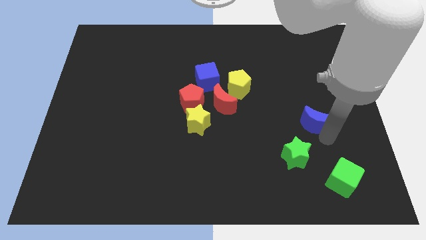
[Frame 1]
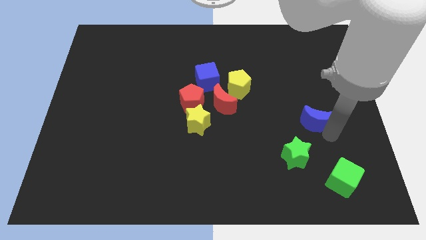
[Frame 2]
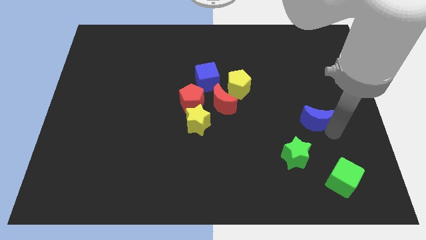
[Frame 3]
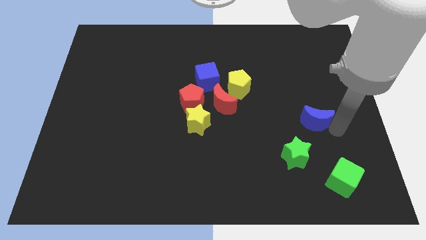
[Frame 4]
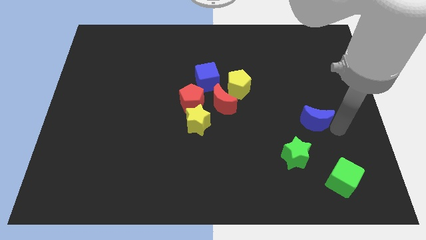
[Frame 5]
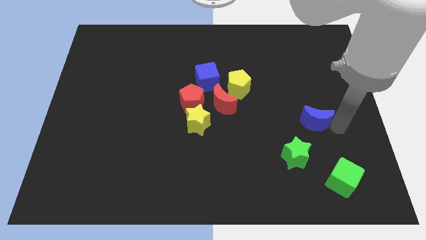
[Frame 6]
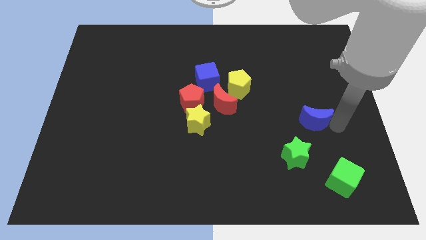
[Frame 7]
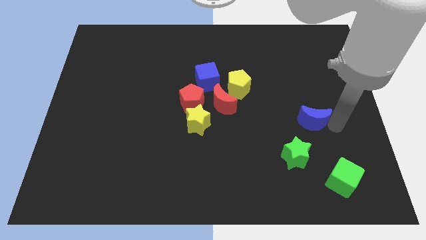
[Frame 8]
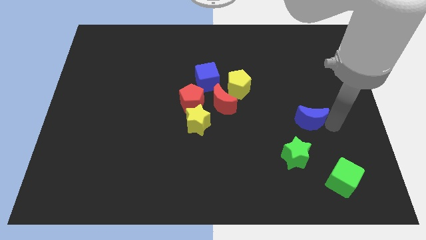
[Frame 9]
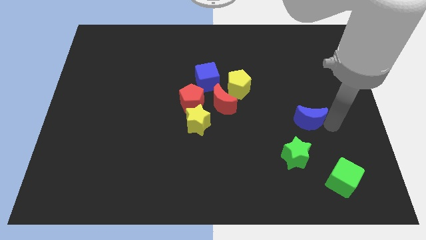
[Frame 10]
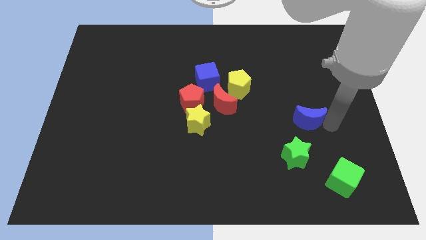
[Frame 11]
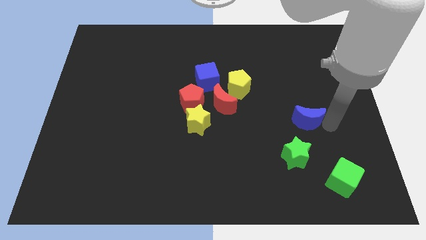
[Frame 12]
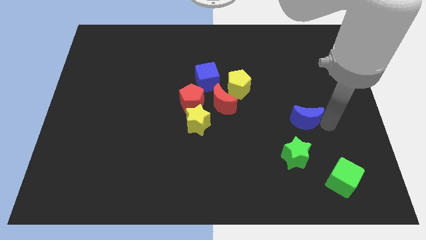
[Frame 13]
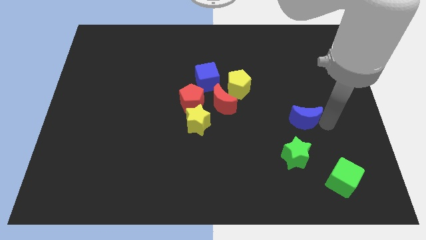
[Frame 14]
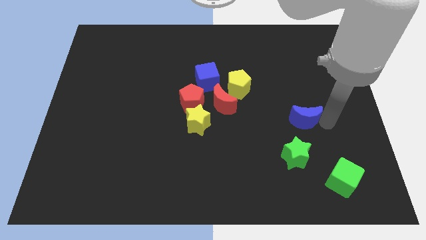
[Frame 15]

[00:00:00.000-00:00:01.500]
place the blue crescent vertically above the green star

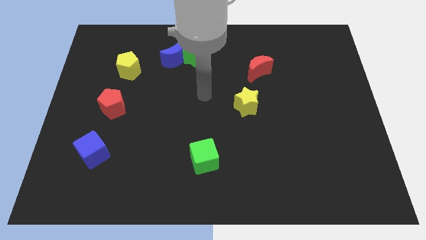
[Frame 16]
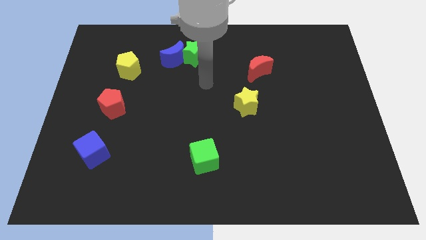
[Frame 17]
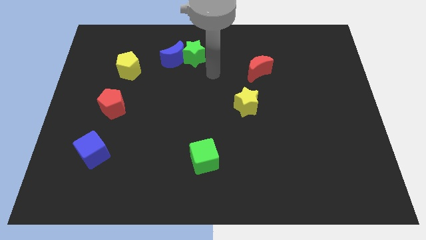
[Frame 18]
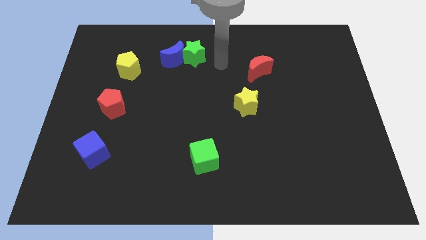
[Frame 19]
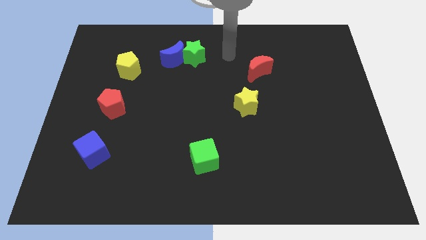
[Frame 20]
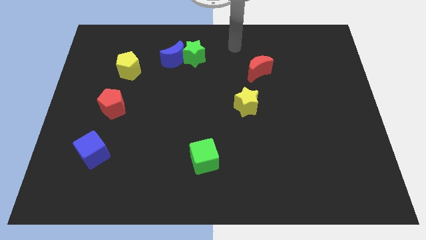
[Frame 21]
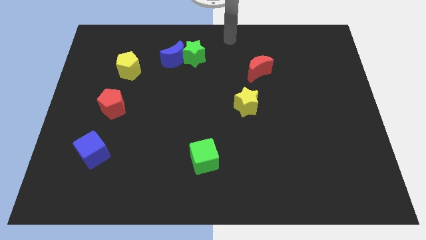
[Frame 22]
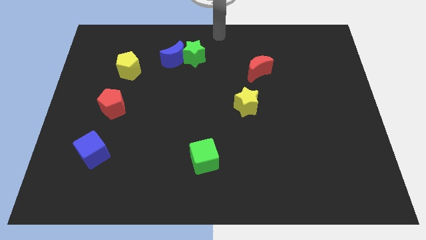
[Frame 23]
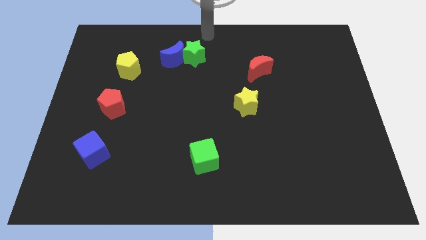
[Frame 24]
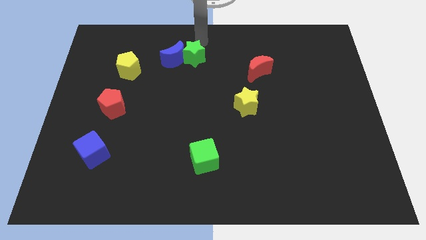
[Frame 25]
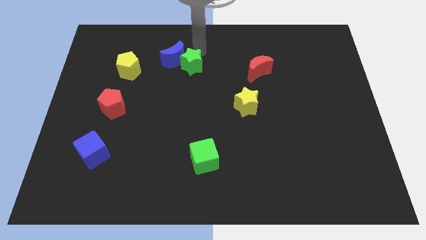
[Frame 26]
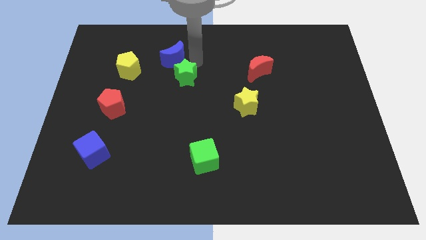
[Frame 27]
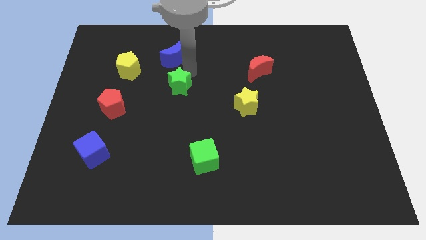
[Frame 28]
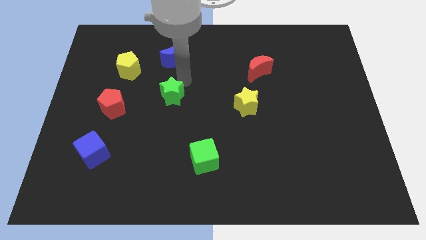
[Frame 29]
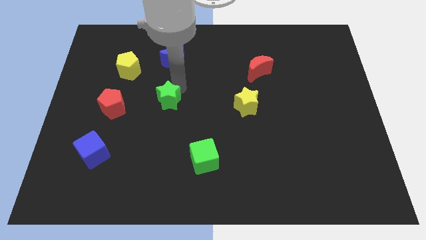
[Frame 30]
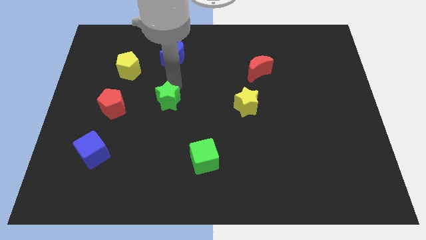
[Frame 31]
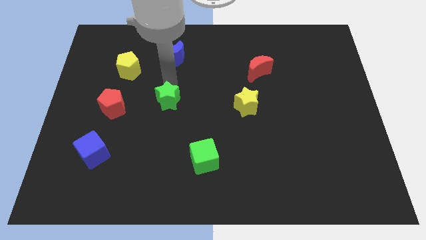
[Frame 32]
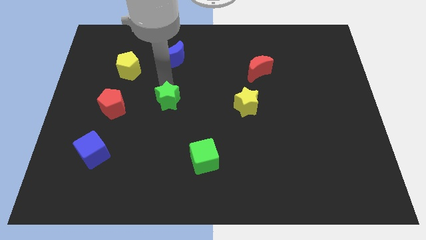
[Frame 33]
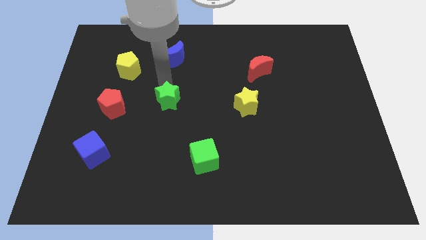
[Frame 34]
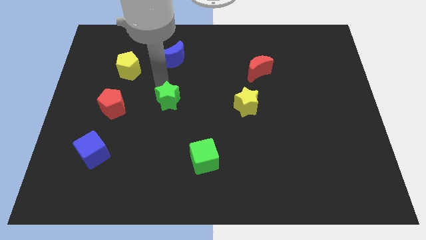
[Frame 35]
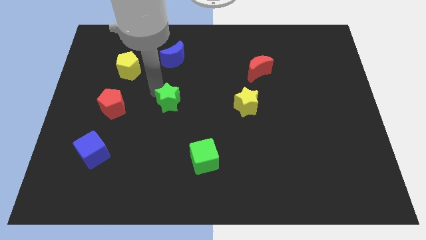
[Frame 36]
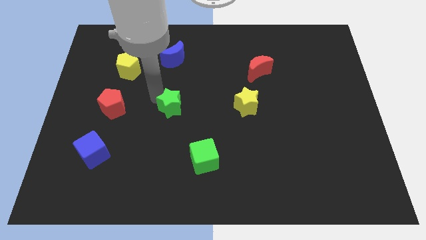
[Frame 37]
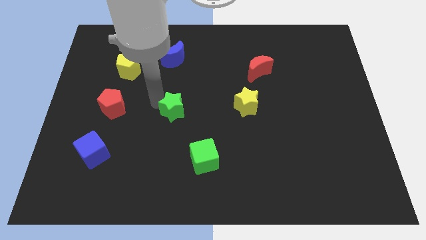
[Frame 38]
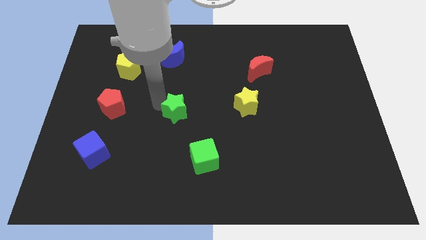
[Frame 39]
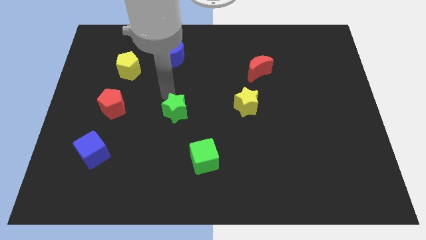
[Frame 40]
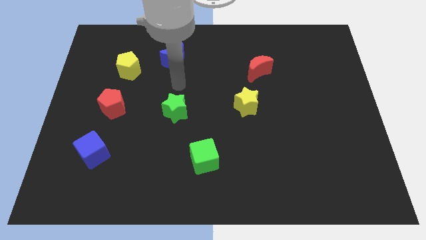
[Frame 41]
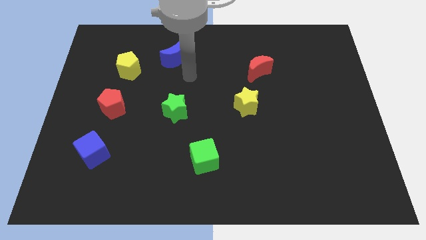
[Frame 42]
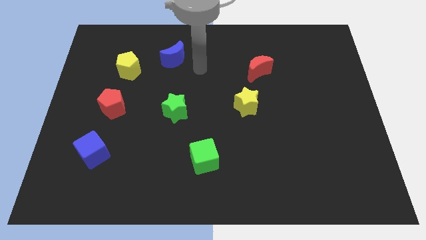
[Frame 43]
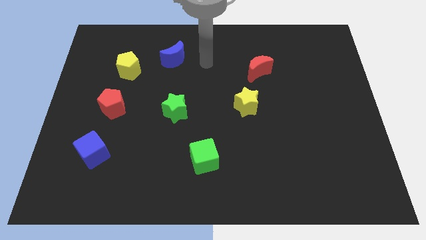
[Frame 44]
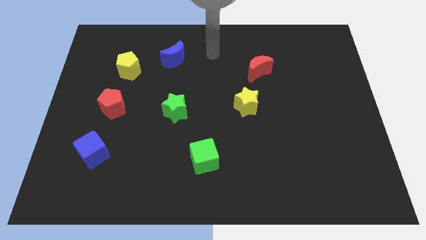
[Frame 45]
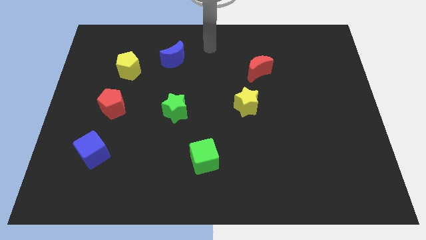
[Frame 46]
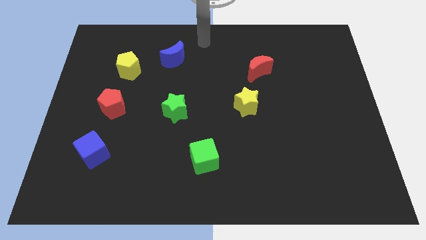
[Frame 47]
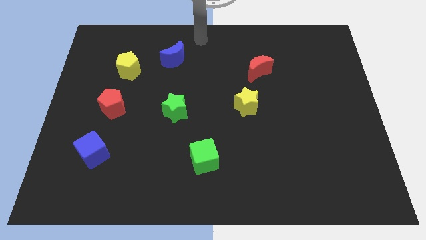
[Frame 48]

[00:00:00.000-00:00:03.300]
put the green star vertically below the blue moon

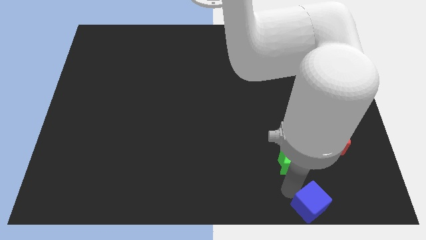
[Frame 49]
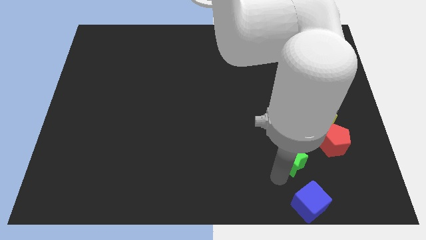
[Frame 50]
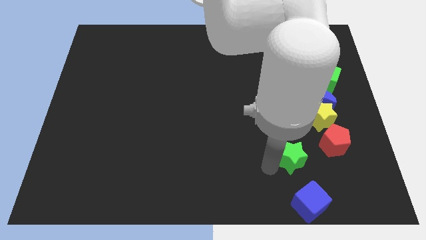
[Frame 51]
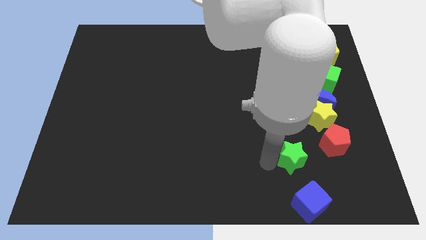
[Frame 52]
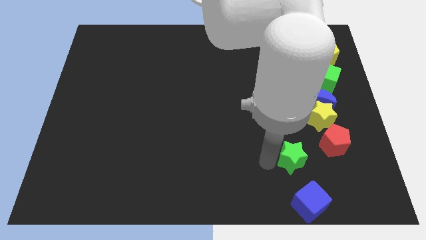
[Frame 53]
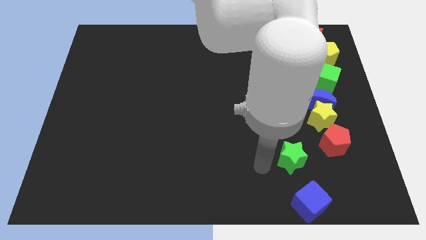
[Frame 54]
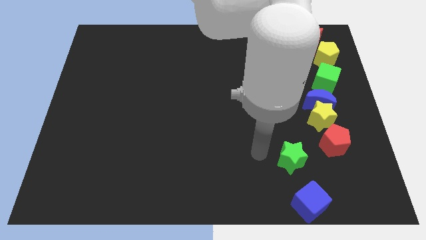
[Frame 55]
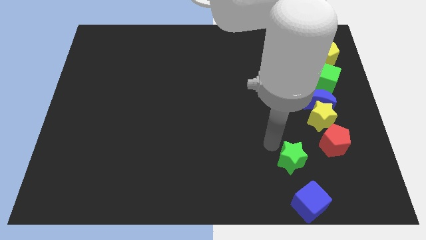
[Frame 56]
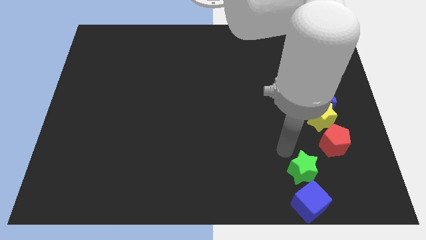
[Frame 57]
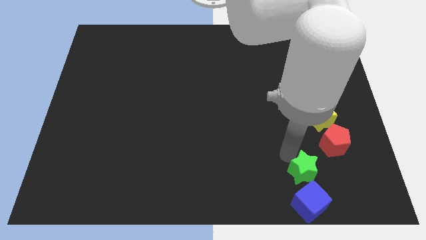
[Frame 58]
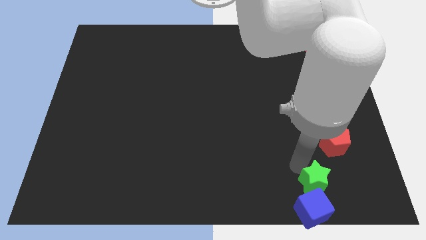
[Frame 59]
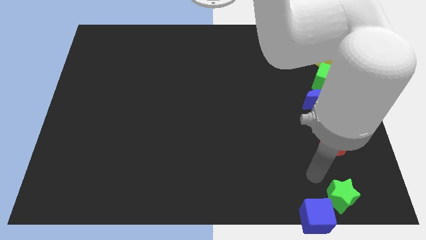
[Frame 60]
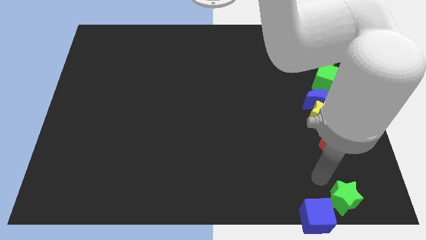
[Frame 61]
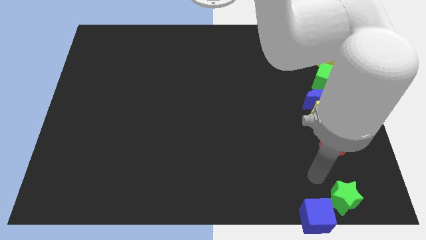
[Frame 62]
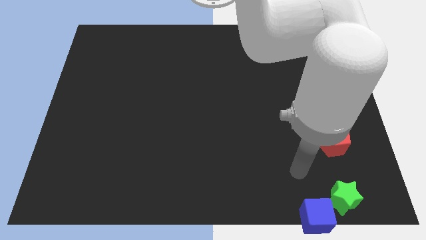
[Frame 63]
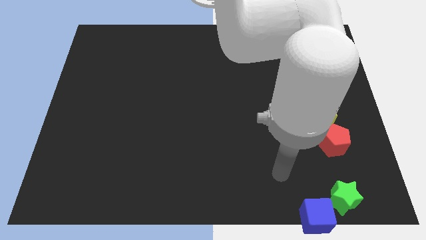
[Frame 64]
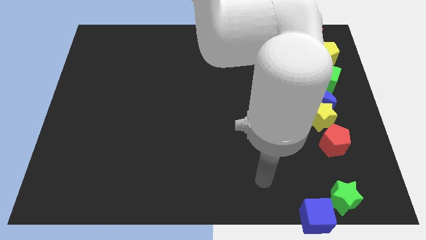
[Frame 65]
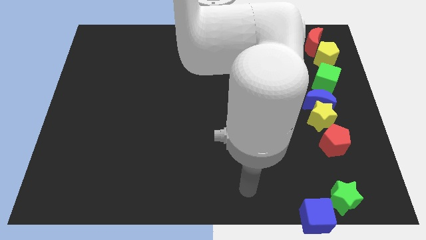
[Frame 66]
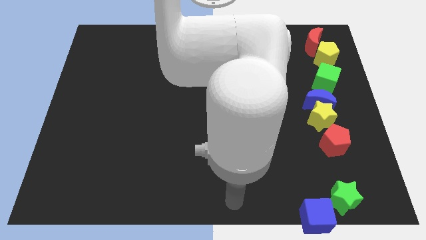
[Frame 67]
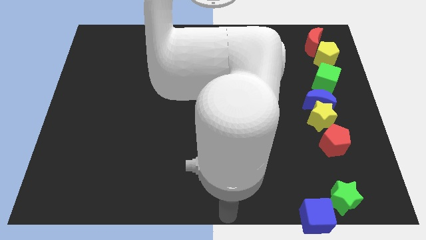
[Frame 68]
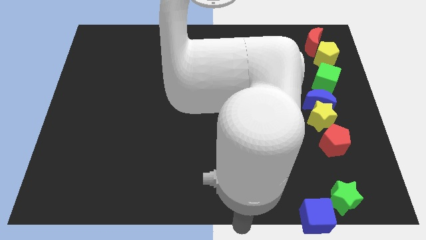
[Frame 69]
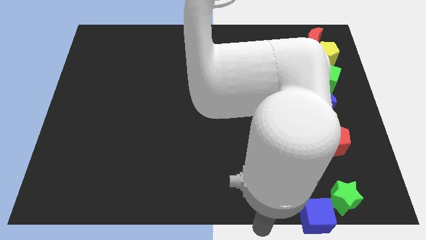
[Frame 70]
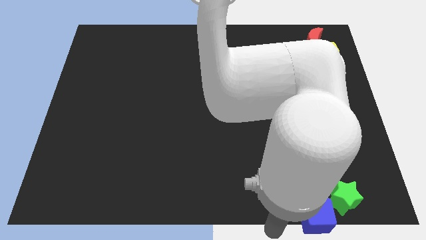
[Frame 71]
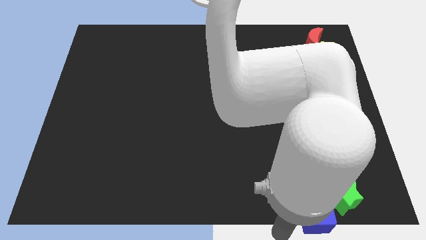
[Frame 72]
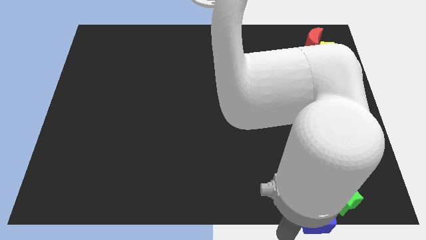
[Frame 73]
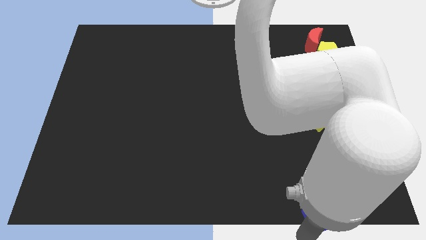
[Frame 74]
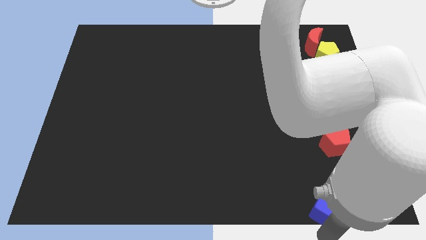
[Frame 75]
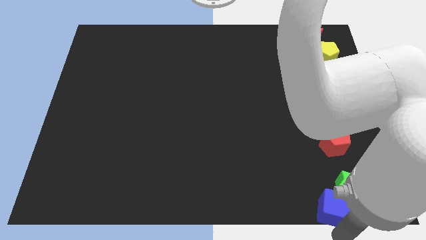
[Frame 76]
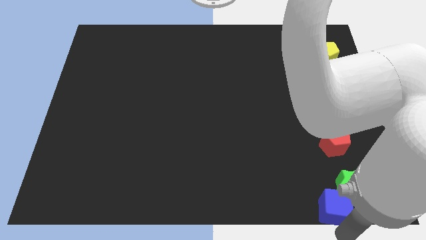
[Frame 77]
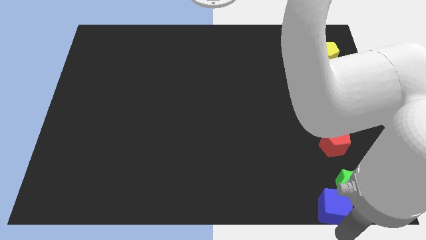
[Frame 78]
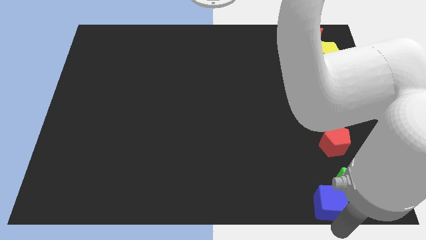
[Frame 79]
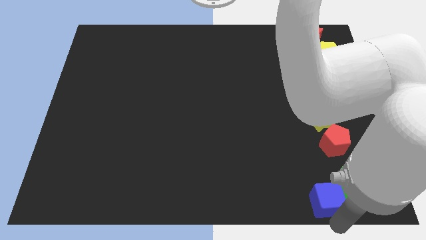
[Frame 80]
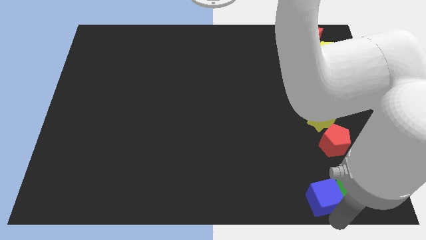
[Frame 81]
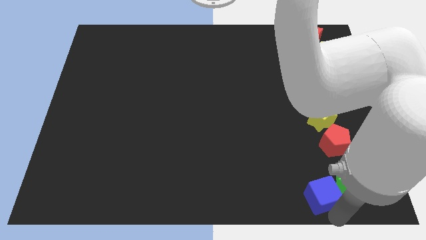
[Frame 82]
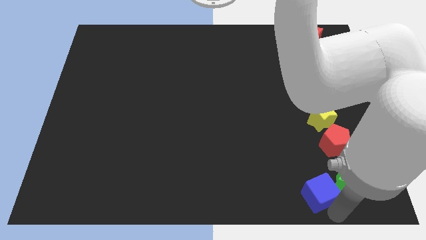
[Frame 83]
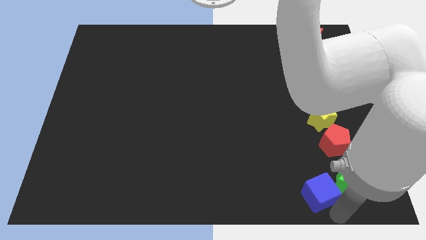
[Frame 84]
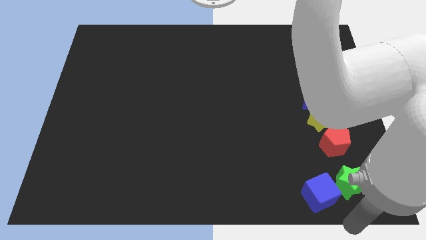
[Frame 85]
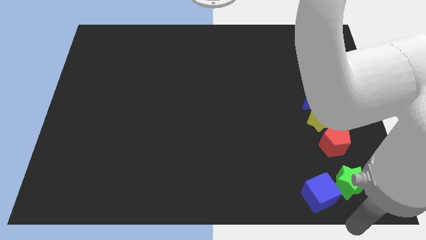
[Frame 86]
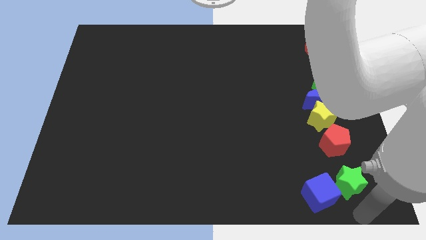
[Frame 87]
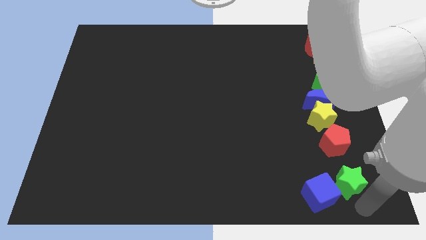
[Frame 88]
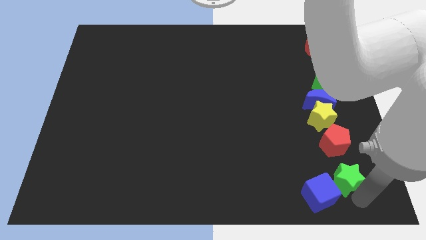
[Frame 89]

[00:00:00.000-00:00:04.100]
move the blue cube and the green star below the red pentagon
